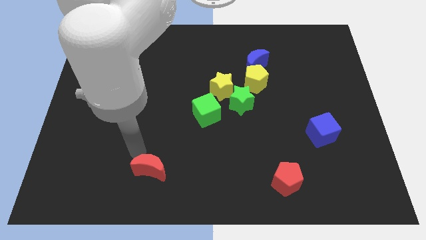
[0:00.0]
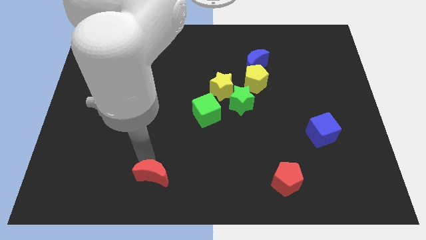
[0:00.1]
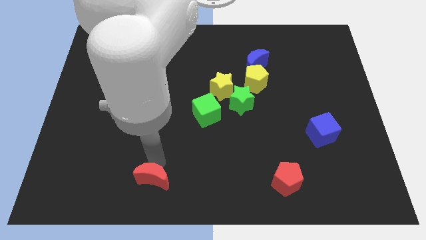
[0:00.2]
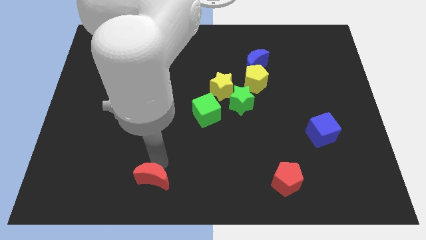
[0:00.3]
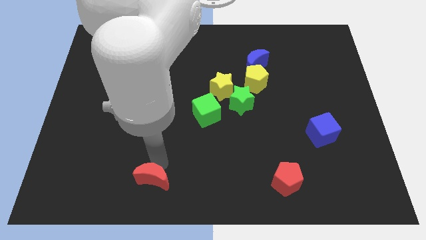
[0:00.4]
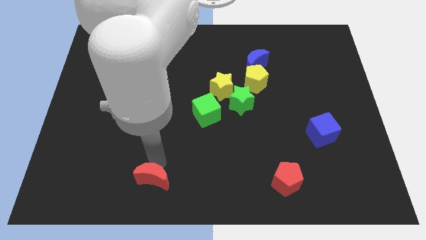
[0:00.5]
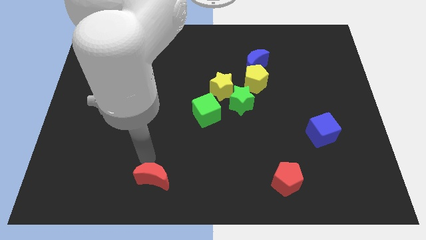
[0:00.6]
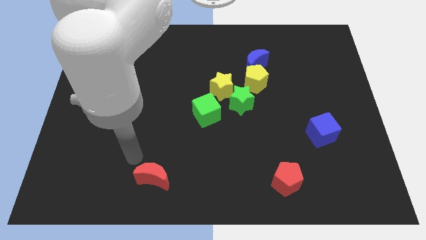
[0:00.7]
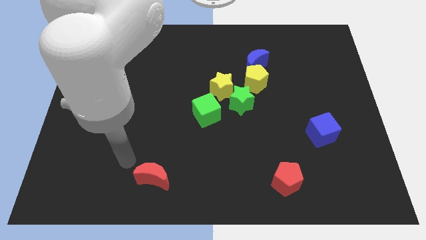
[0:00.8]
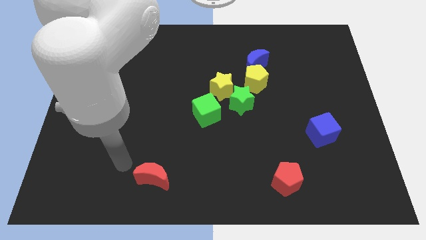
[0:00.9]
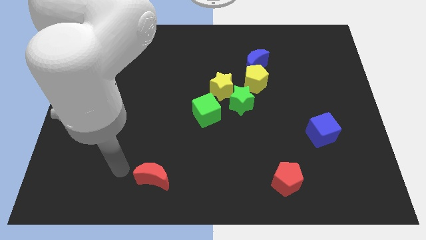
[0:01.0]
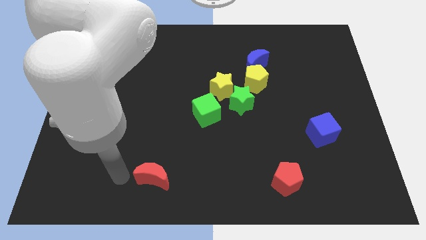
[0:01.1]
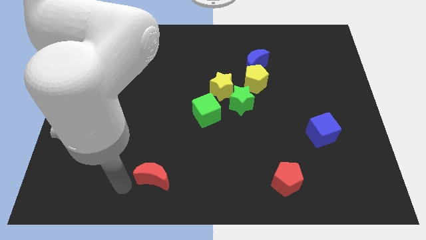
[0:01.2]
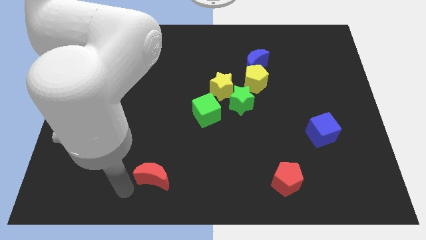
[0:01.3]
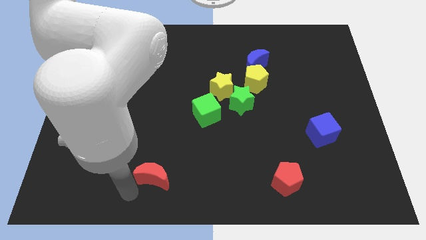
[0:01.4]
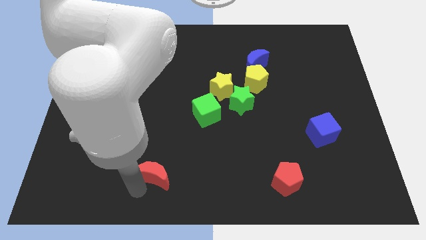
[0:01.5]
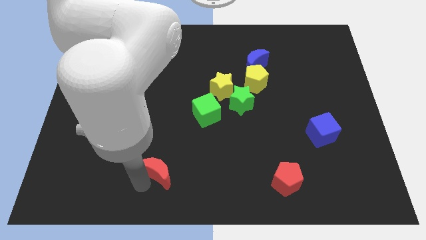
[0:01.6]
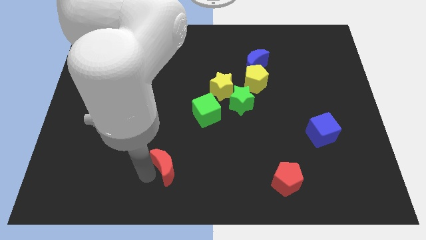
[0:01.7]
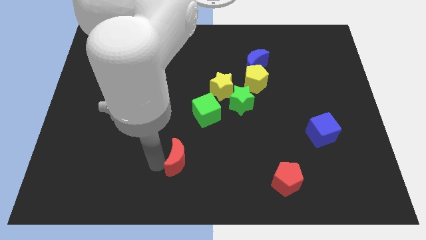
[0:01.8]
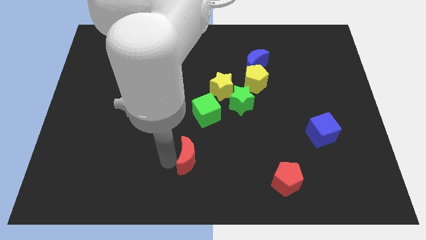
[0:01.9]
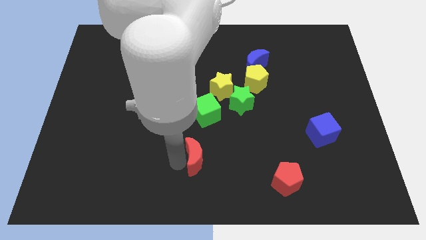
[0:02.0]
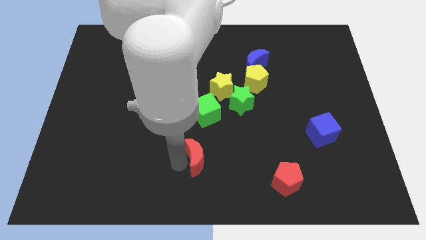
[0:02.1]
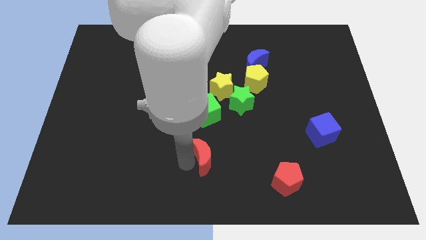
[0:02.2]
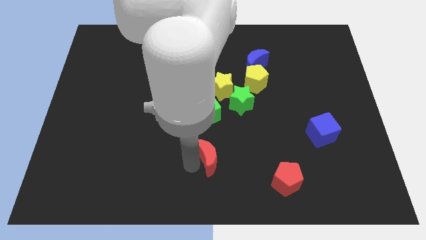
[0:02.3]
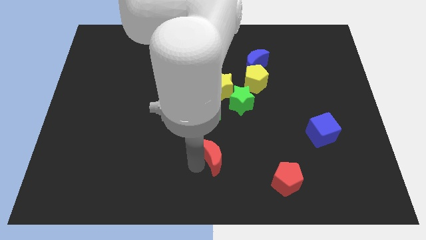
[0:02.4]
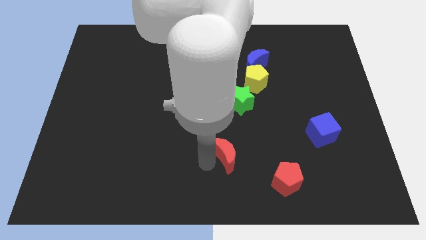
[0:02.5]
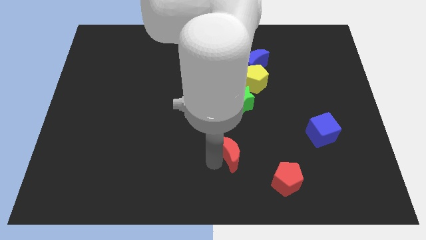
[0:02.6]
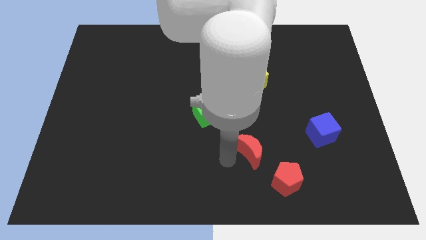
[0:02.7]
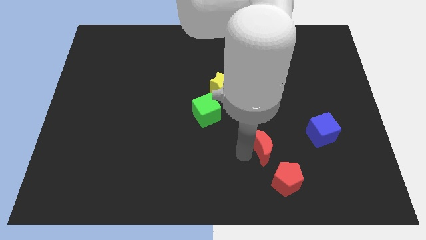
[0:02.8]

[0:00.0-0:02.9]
place the red moon in between the green star and red pentagon

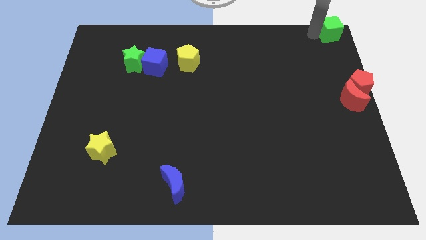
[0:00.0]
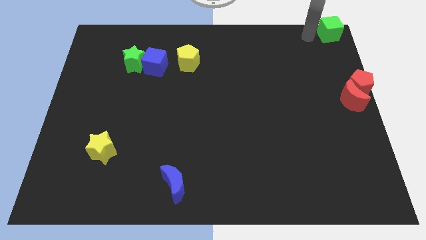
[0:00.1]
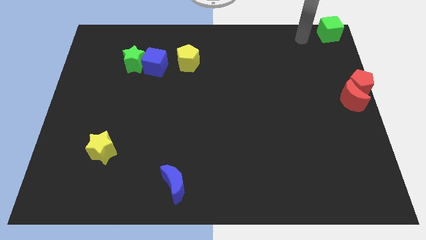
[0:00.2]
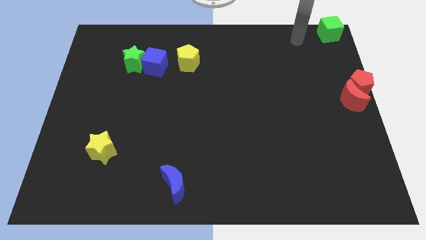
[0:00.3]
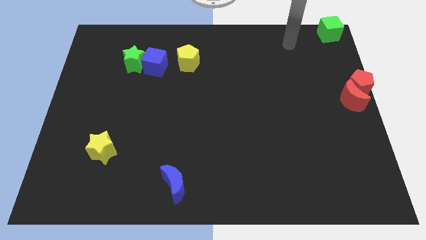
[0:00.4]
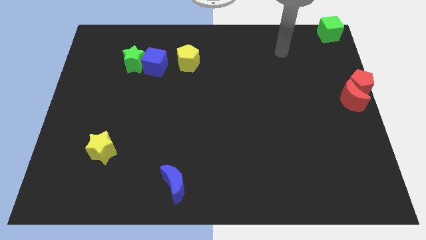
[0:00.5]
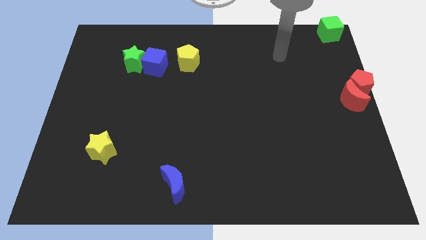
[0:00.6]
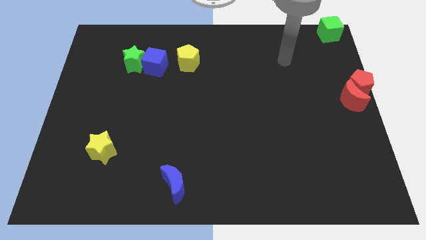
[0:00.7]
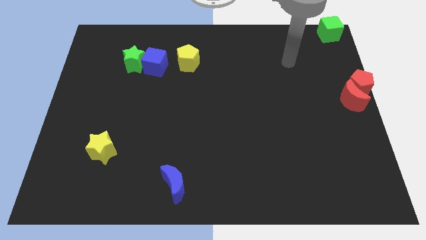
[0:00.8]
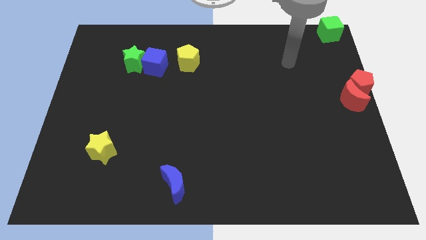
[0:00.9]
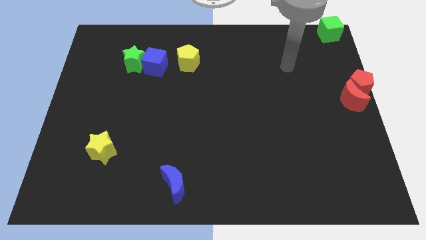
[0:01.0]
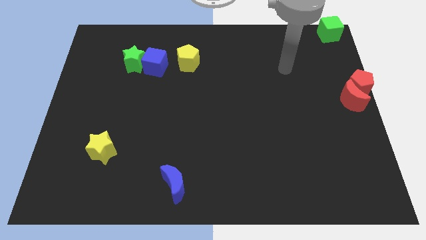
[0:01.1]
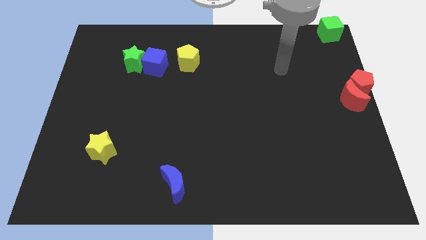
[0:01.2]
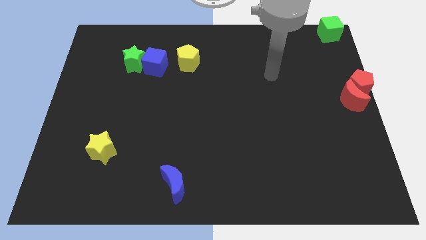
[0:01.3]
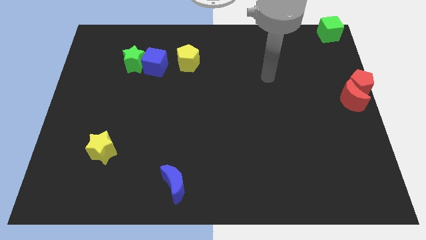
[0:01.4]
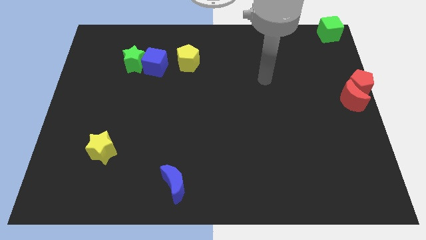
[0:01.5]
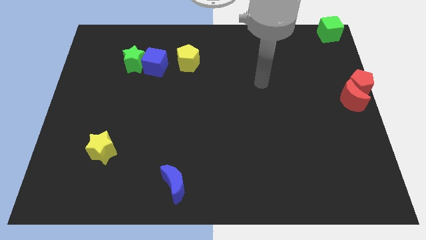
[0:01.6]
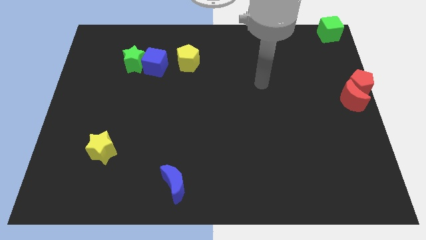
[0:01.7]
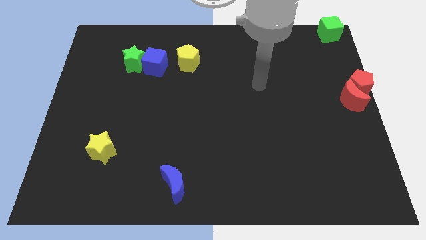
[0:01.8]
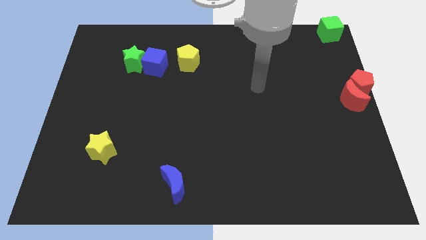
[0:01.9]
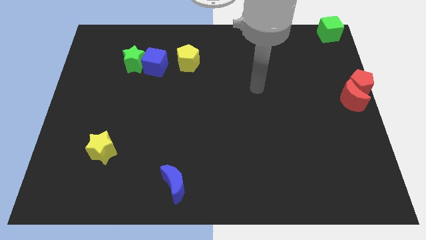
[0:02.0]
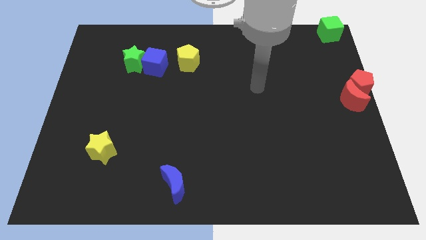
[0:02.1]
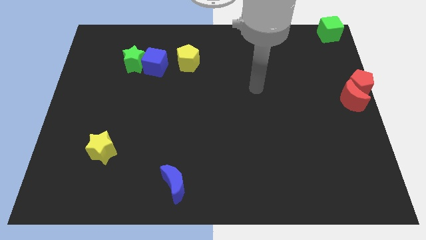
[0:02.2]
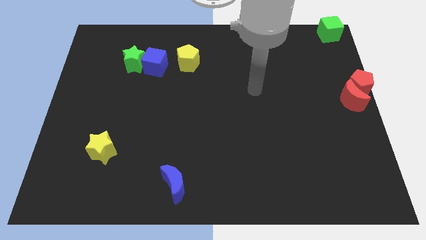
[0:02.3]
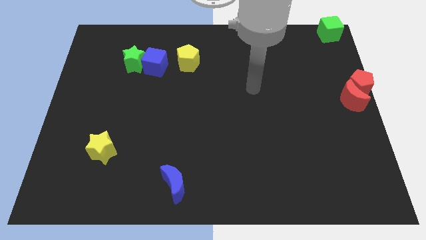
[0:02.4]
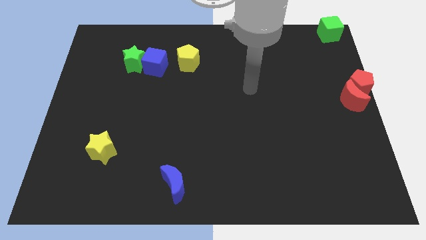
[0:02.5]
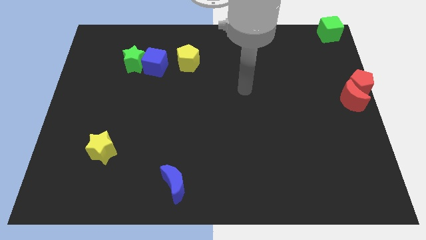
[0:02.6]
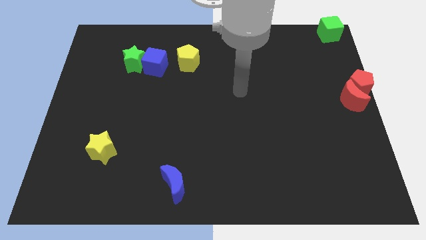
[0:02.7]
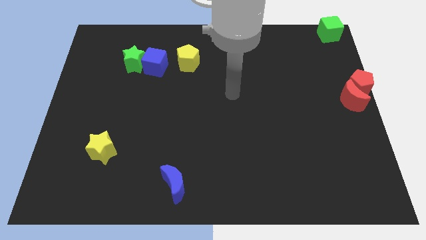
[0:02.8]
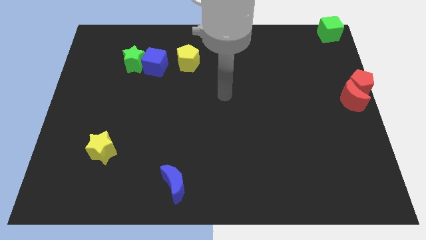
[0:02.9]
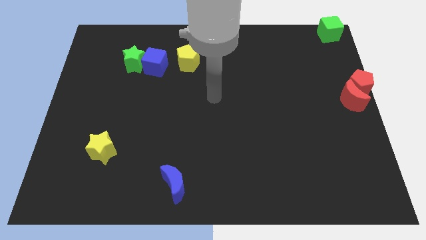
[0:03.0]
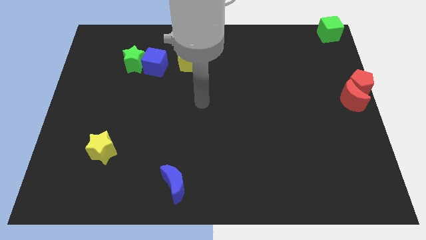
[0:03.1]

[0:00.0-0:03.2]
point your arm at the center of the board

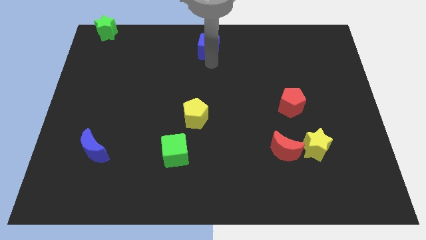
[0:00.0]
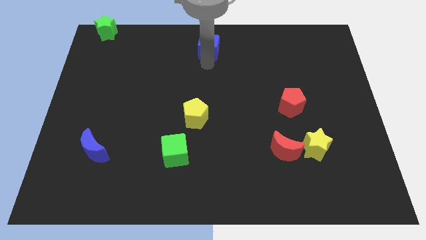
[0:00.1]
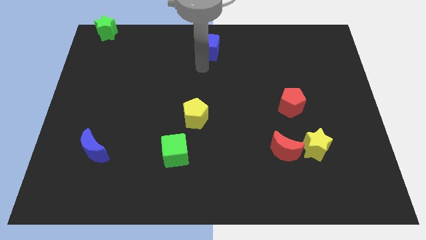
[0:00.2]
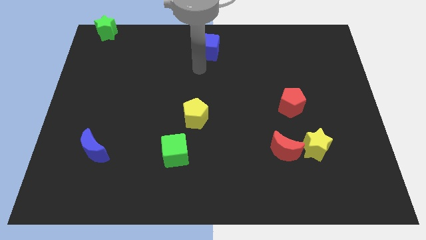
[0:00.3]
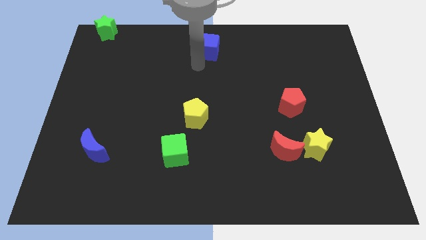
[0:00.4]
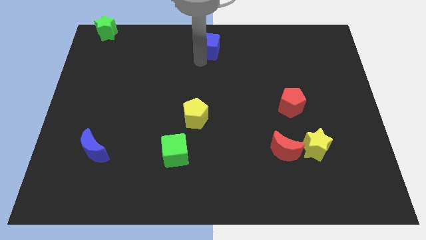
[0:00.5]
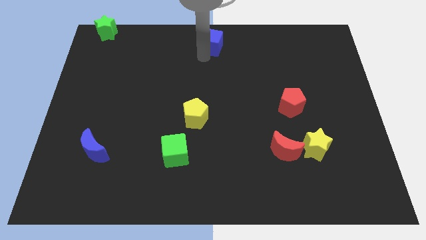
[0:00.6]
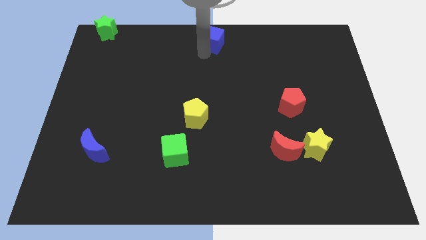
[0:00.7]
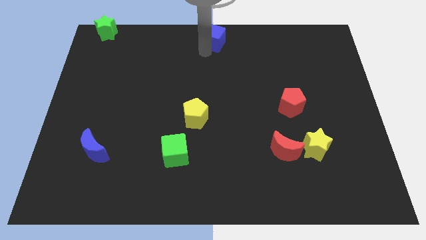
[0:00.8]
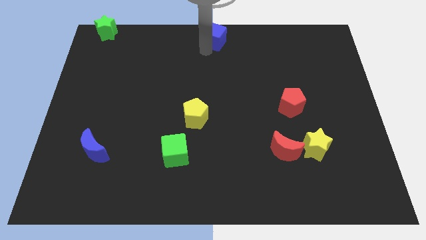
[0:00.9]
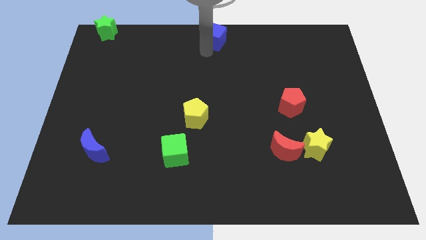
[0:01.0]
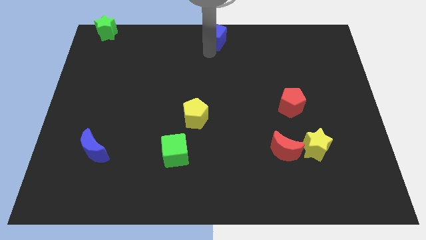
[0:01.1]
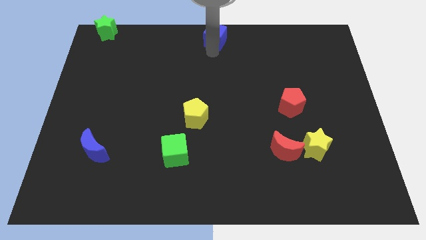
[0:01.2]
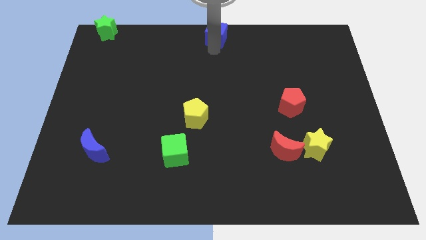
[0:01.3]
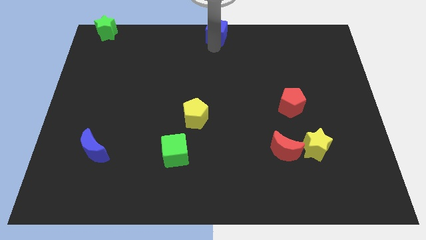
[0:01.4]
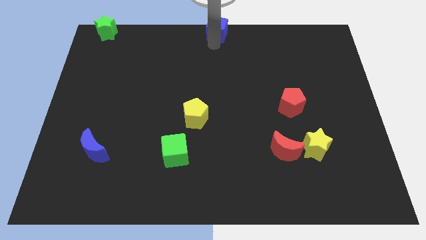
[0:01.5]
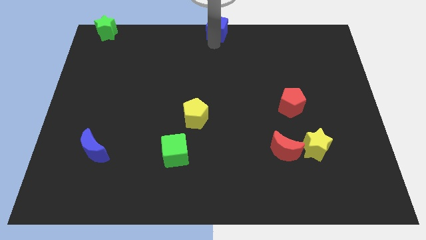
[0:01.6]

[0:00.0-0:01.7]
move the blue cube to the top center

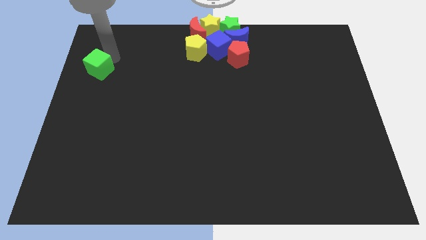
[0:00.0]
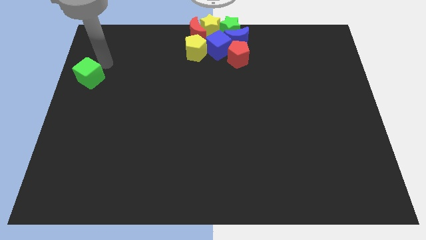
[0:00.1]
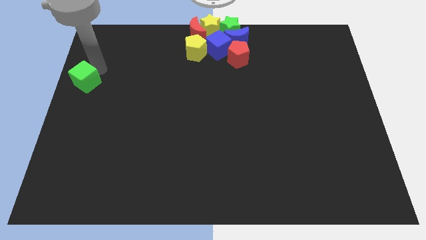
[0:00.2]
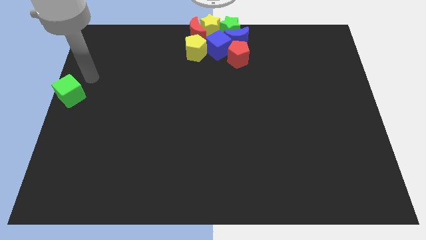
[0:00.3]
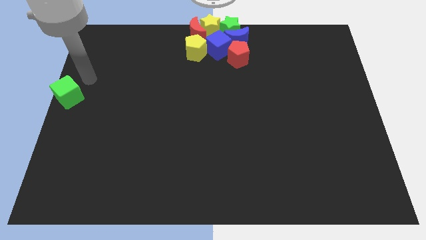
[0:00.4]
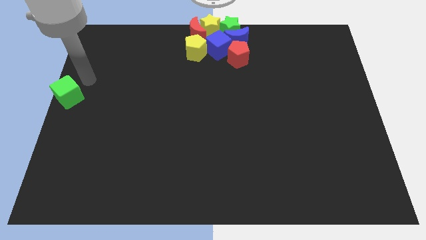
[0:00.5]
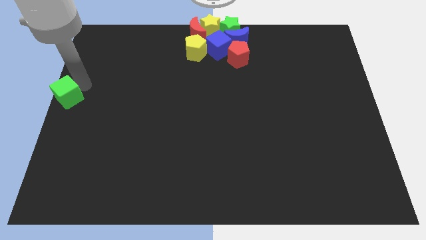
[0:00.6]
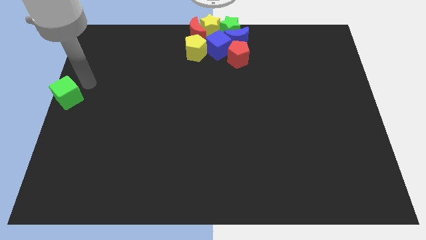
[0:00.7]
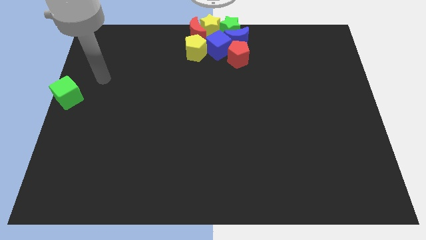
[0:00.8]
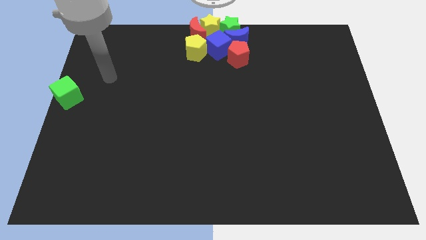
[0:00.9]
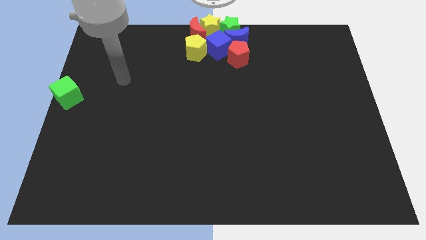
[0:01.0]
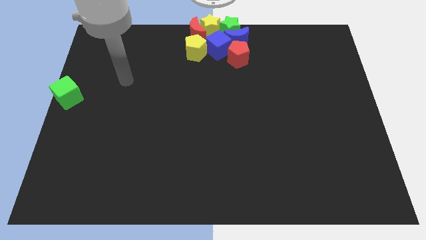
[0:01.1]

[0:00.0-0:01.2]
place the green cube at the center left side of the board

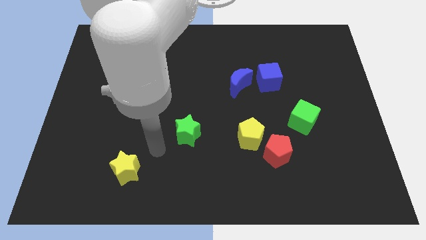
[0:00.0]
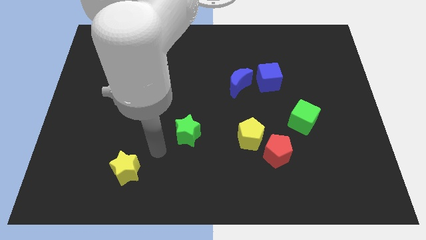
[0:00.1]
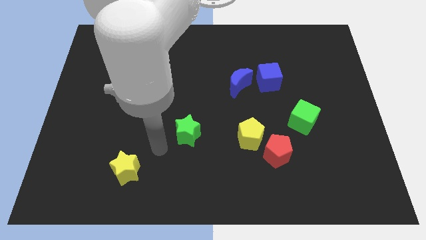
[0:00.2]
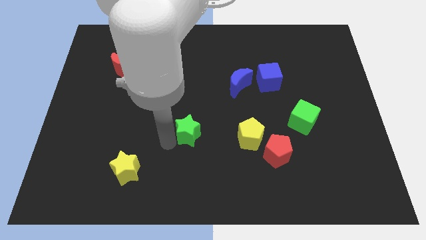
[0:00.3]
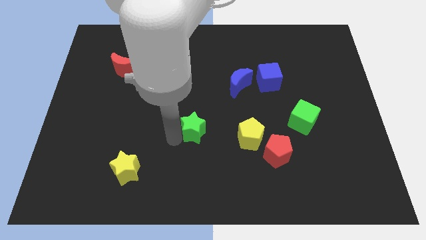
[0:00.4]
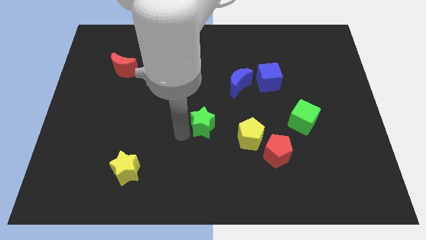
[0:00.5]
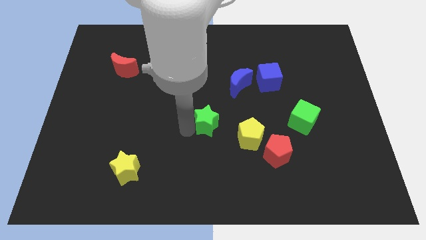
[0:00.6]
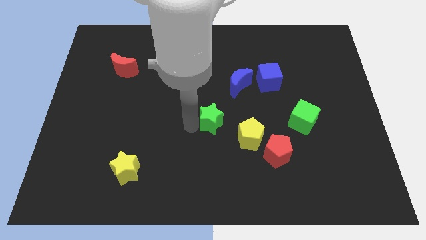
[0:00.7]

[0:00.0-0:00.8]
put the green star diagonally top right yellow star
